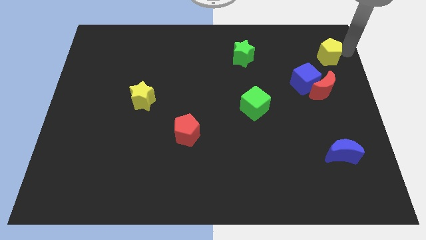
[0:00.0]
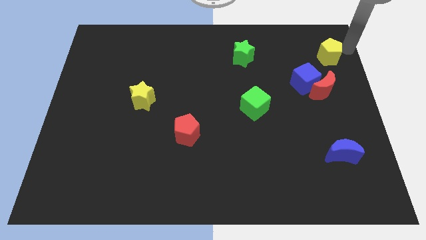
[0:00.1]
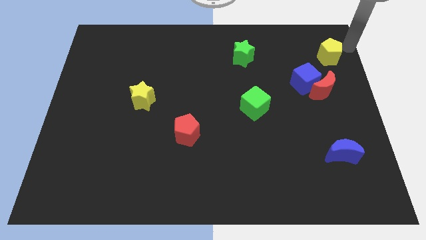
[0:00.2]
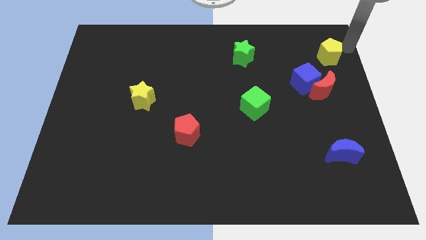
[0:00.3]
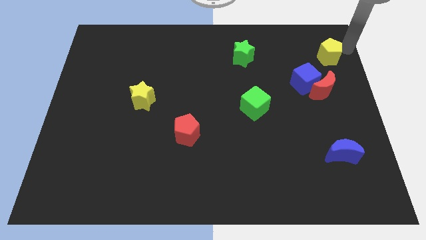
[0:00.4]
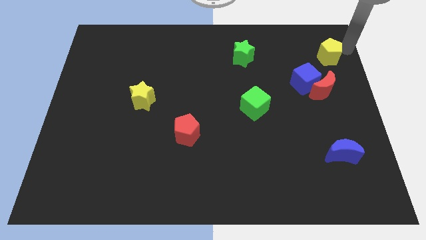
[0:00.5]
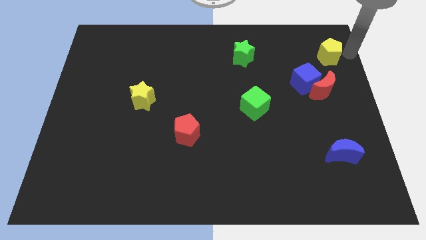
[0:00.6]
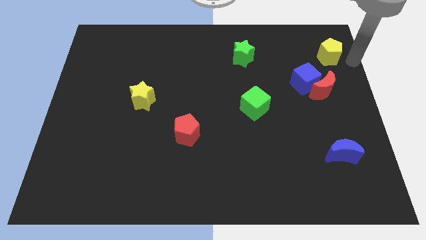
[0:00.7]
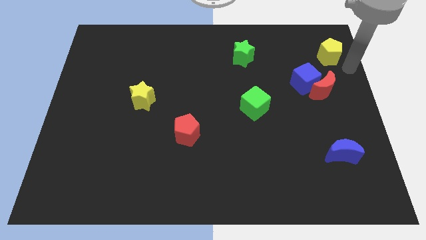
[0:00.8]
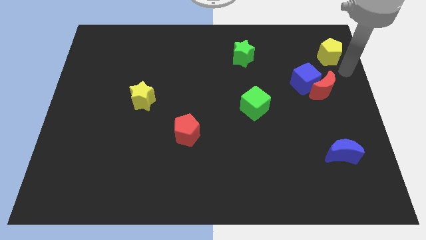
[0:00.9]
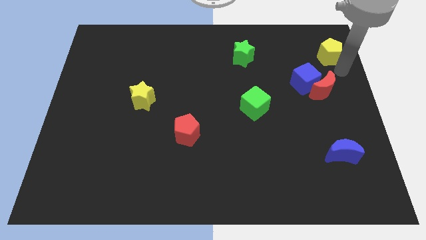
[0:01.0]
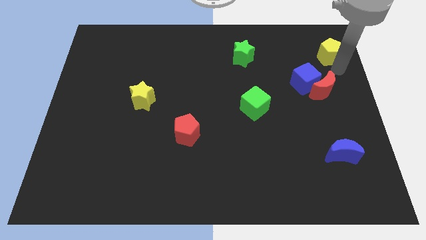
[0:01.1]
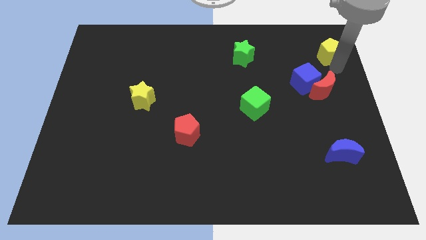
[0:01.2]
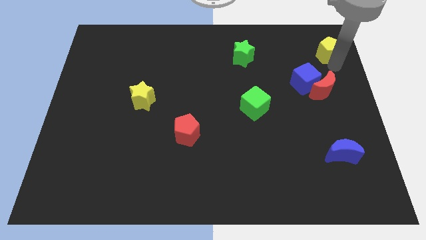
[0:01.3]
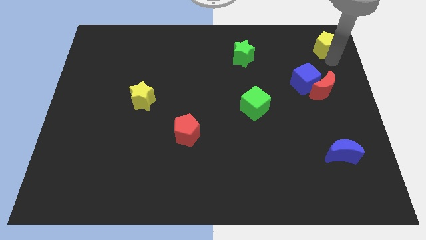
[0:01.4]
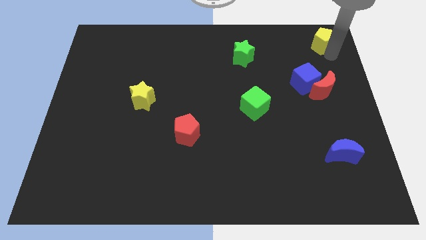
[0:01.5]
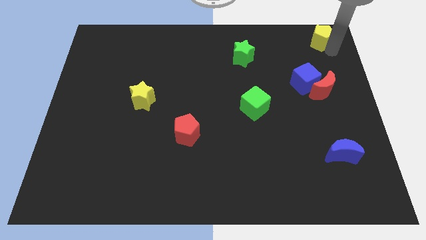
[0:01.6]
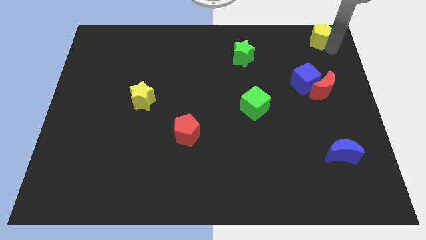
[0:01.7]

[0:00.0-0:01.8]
place the yellow pentagon at the top right of the board

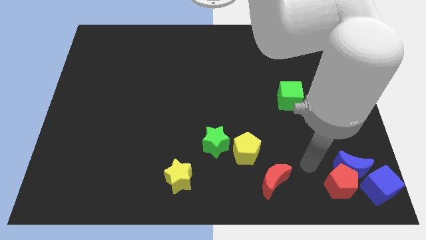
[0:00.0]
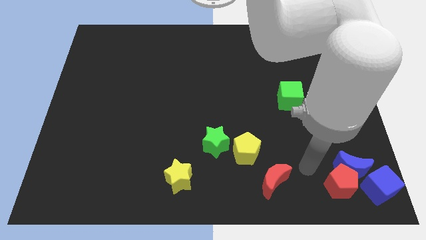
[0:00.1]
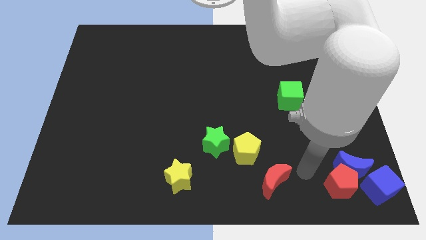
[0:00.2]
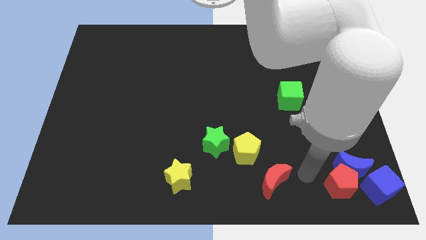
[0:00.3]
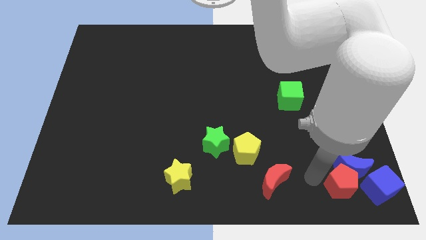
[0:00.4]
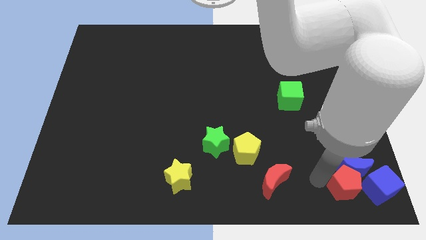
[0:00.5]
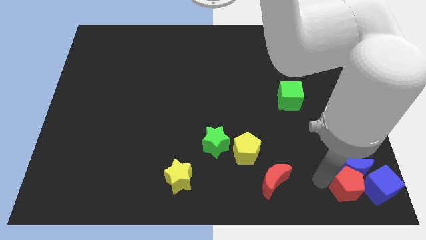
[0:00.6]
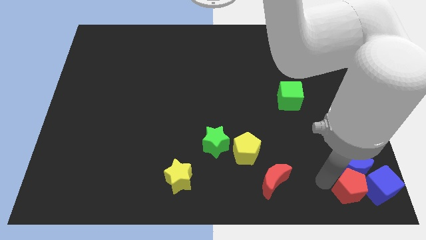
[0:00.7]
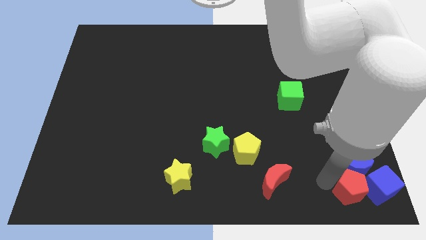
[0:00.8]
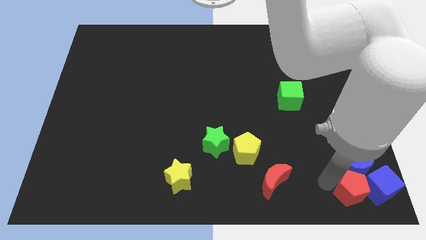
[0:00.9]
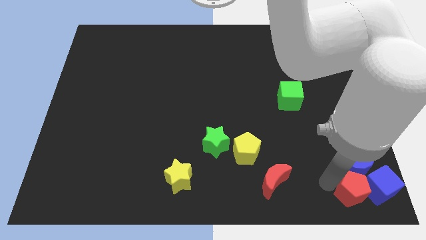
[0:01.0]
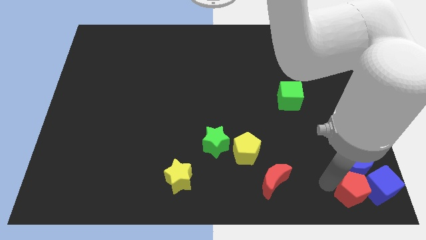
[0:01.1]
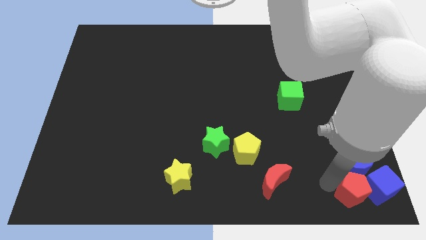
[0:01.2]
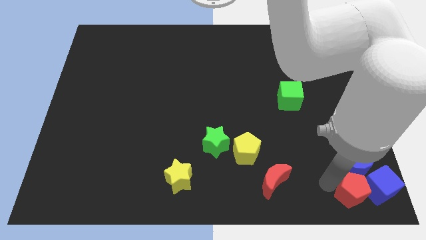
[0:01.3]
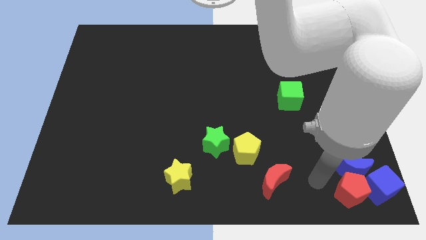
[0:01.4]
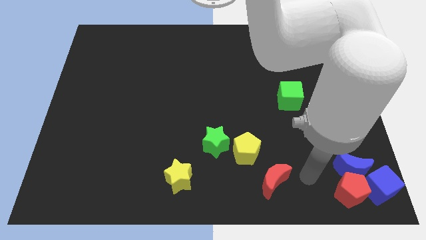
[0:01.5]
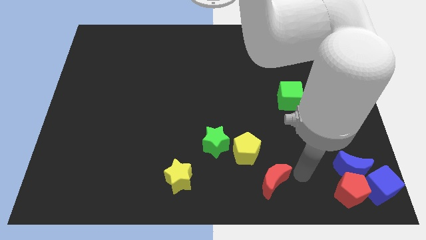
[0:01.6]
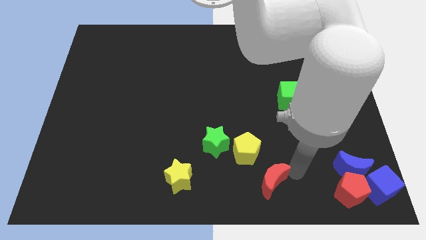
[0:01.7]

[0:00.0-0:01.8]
slide the red pentagon to the left of the blue cube

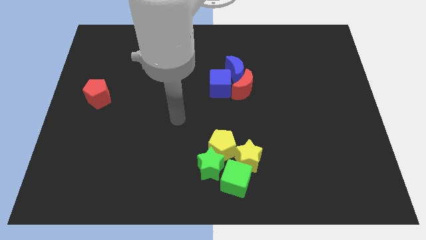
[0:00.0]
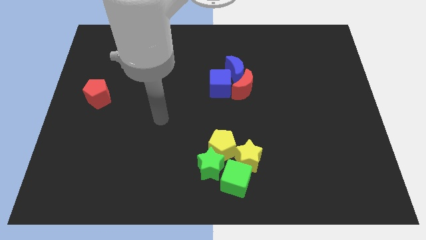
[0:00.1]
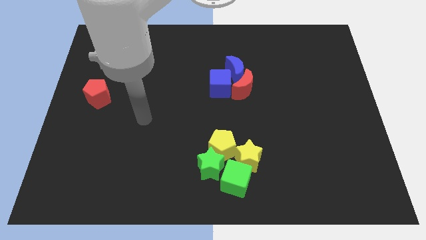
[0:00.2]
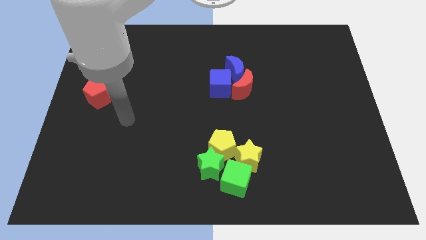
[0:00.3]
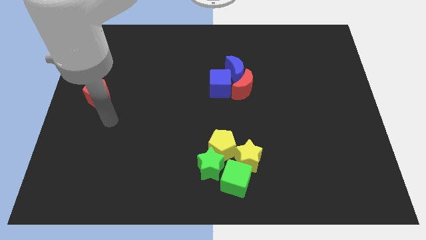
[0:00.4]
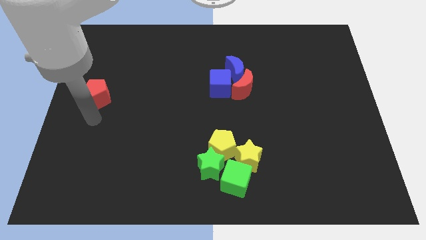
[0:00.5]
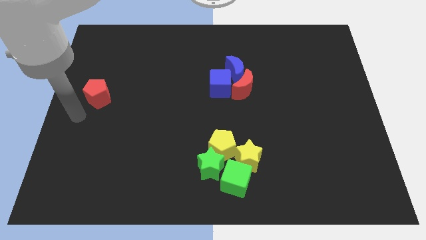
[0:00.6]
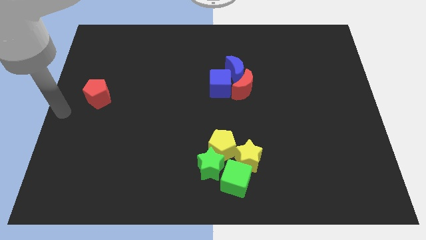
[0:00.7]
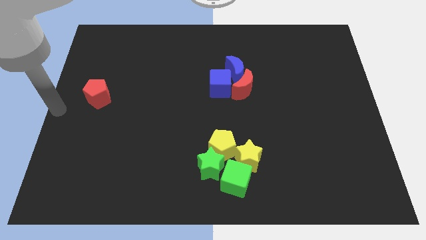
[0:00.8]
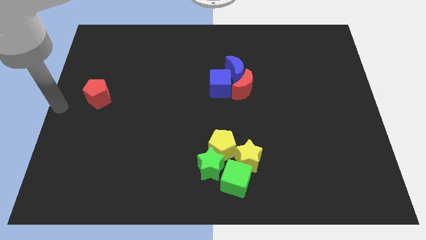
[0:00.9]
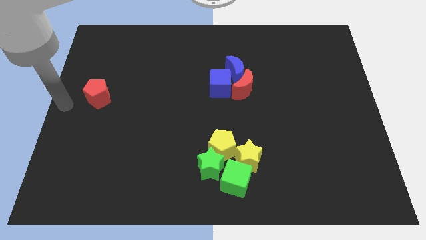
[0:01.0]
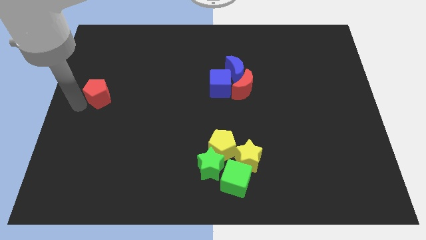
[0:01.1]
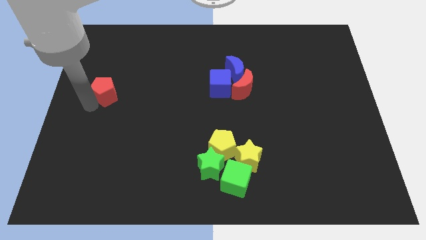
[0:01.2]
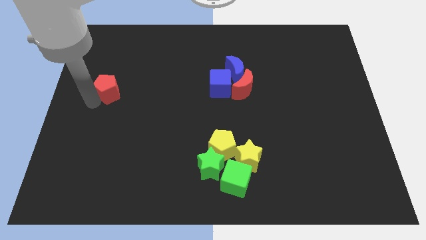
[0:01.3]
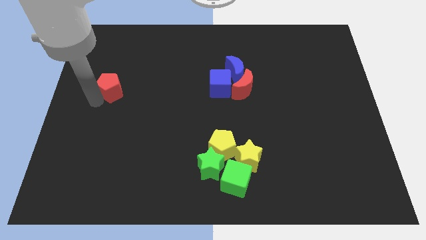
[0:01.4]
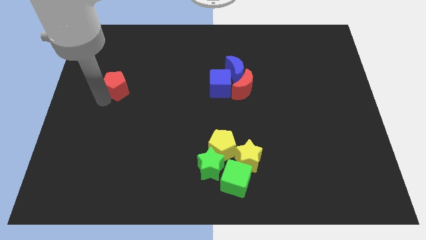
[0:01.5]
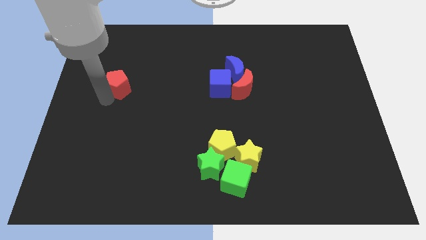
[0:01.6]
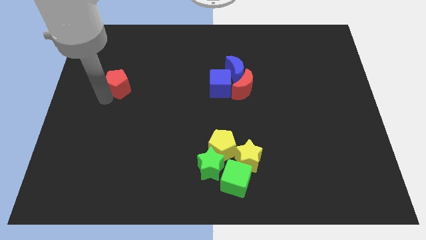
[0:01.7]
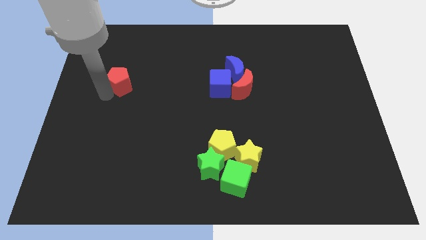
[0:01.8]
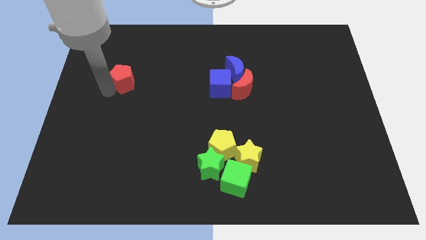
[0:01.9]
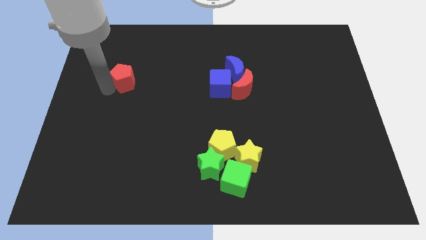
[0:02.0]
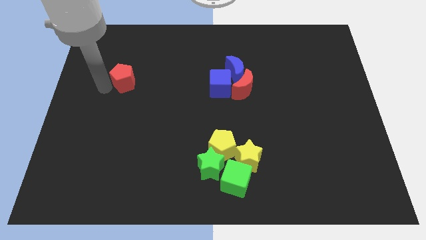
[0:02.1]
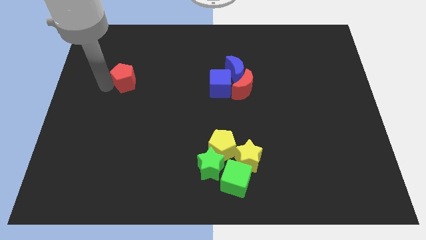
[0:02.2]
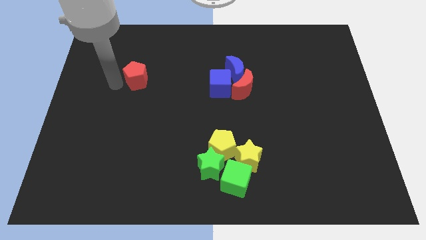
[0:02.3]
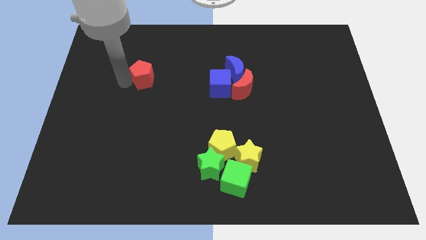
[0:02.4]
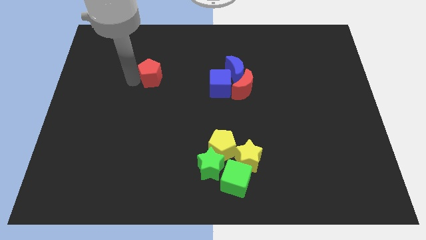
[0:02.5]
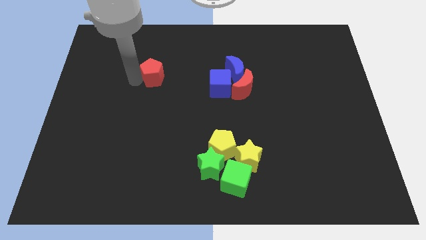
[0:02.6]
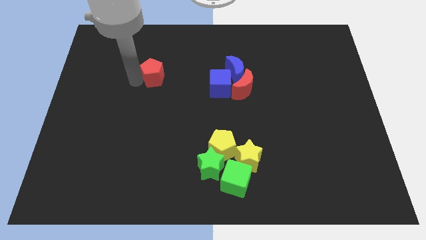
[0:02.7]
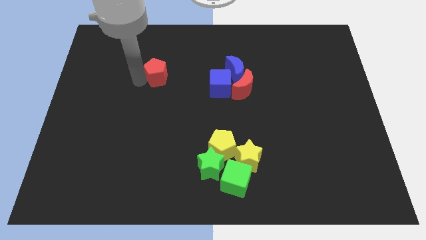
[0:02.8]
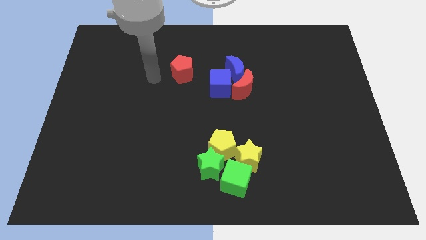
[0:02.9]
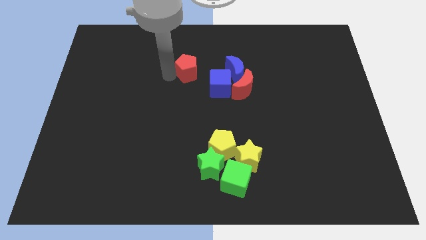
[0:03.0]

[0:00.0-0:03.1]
drag the red pentagon towards the group of both blue blocks and red crescent

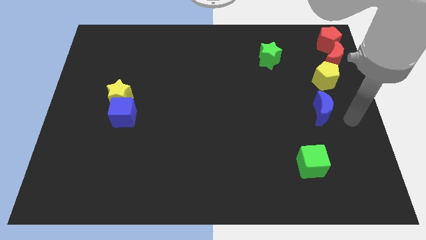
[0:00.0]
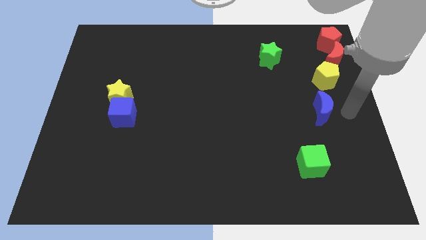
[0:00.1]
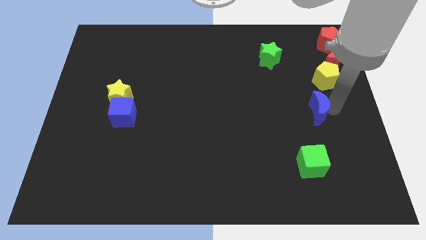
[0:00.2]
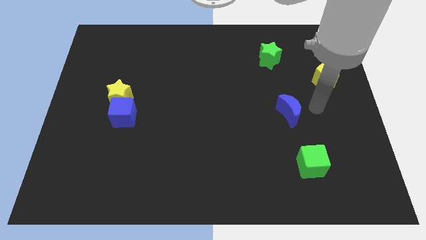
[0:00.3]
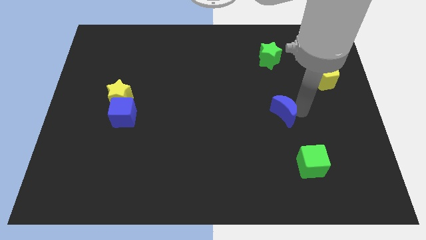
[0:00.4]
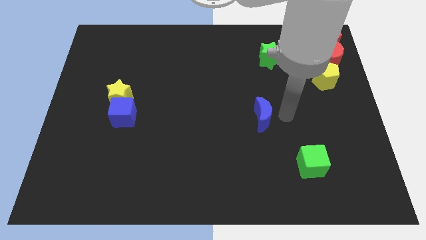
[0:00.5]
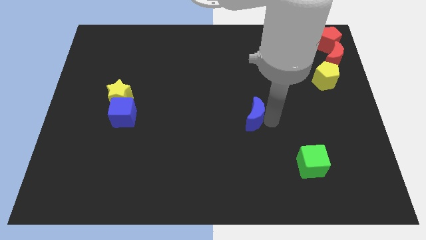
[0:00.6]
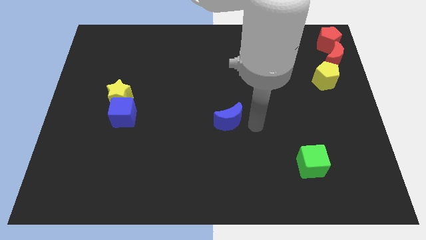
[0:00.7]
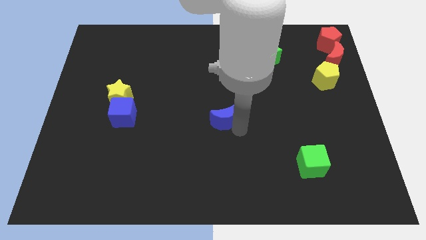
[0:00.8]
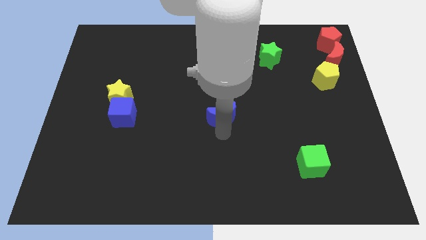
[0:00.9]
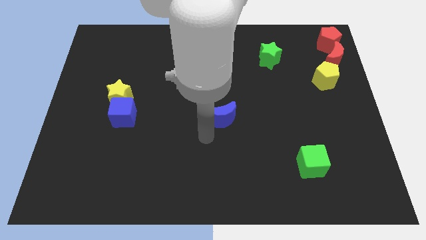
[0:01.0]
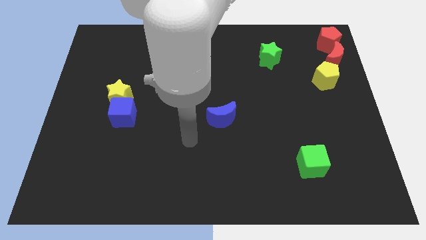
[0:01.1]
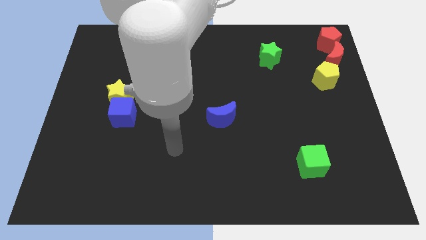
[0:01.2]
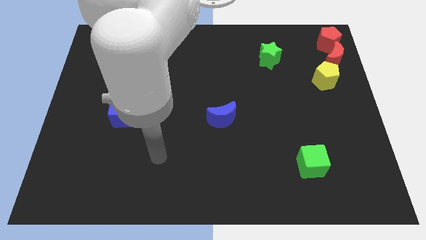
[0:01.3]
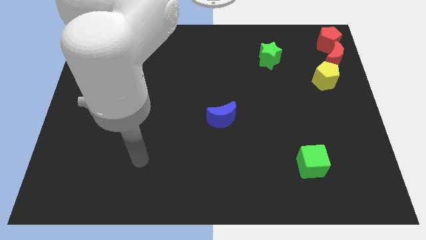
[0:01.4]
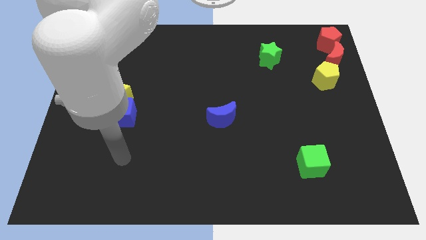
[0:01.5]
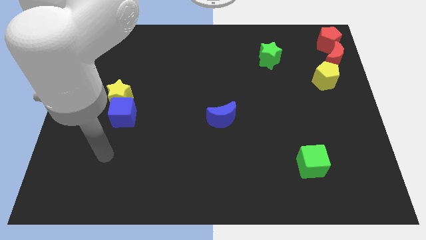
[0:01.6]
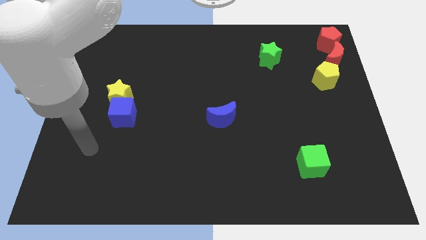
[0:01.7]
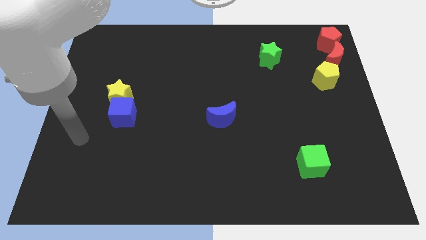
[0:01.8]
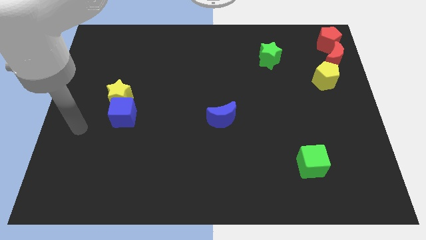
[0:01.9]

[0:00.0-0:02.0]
push the blue moon towards the center of the board

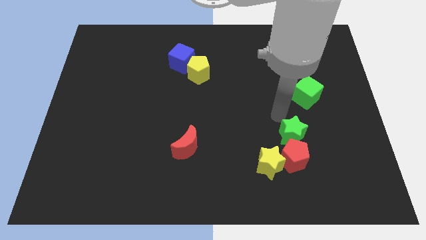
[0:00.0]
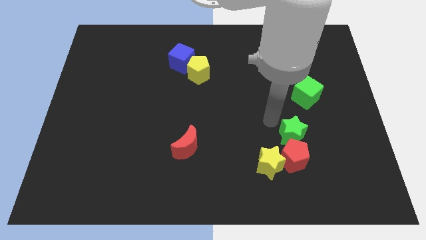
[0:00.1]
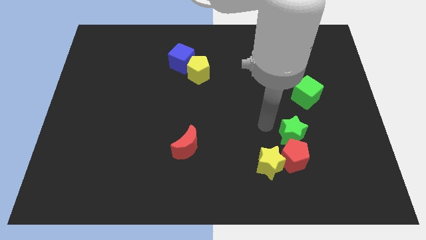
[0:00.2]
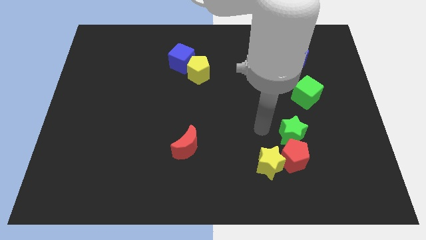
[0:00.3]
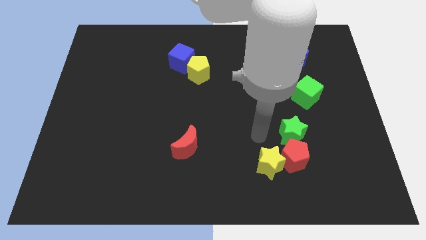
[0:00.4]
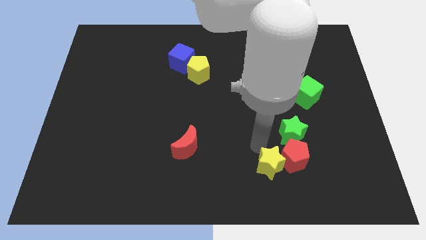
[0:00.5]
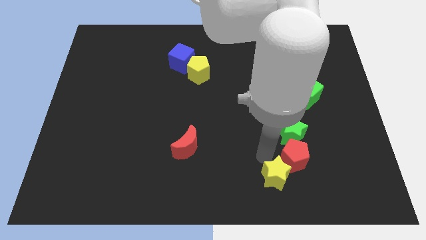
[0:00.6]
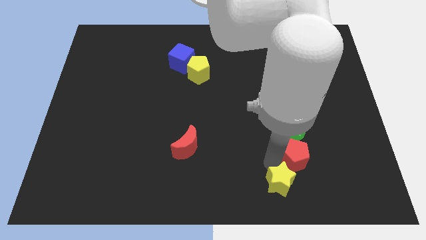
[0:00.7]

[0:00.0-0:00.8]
push the yellow star downwards slightly
